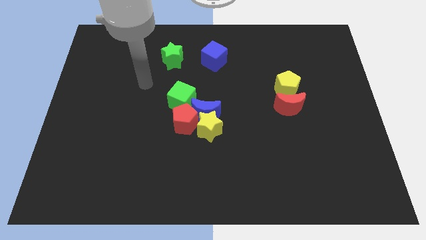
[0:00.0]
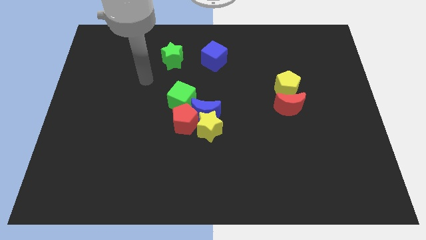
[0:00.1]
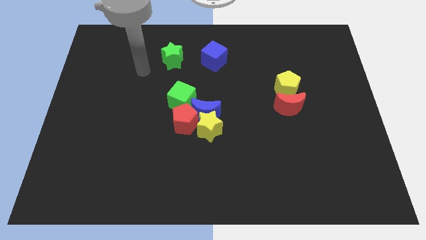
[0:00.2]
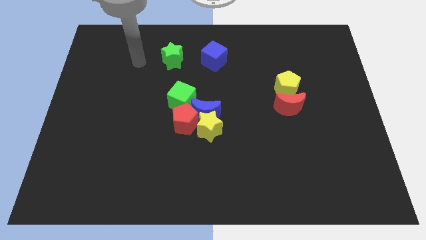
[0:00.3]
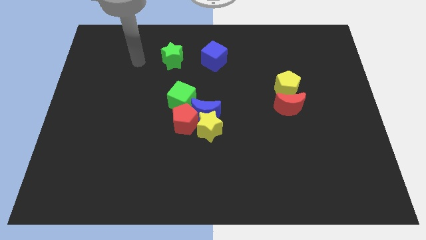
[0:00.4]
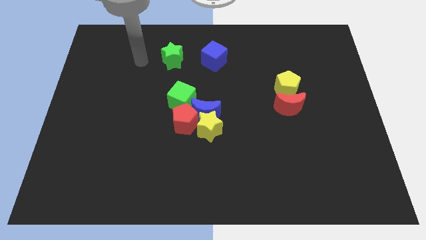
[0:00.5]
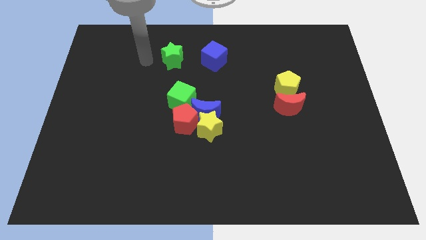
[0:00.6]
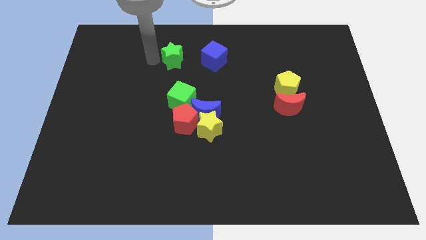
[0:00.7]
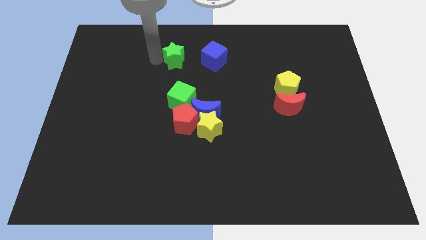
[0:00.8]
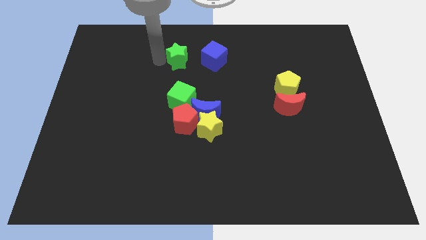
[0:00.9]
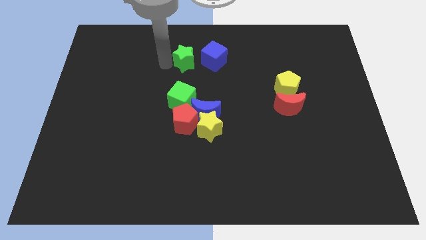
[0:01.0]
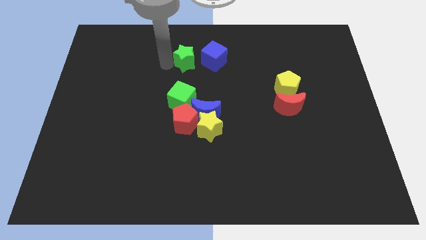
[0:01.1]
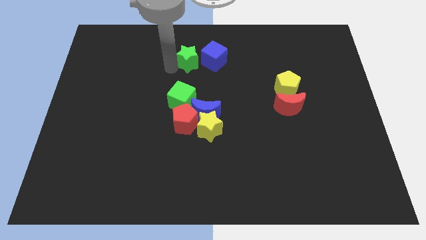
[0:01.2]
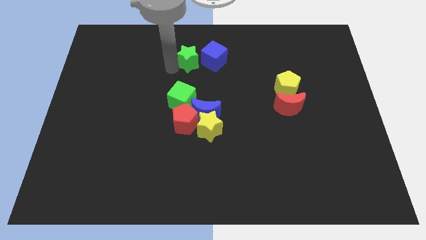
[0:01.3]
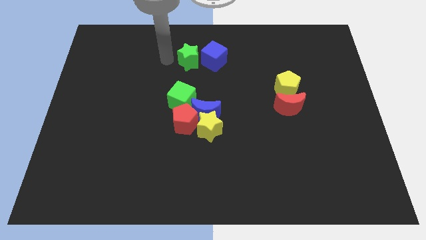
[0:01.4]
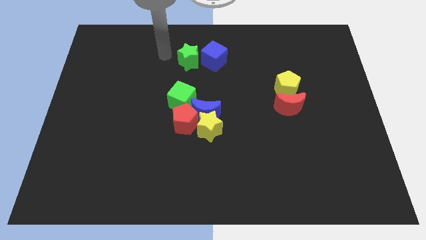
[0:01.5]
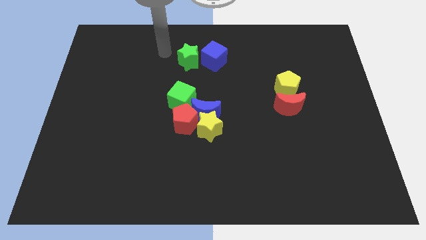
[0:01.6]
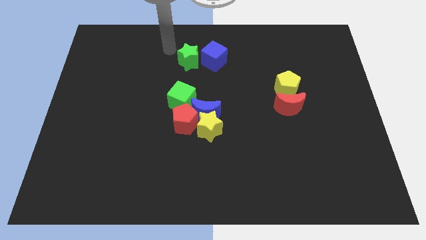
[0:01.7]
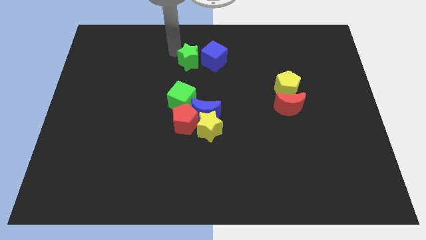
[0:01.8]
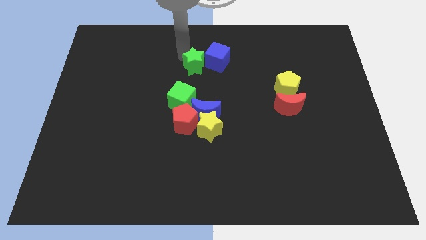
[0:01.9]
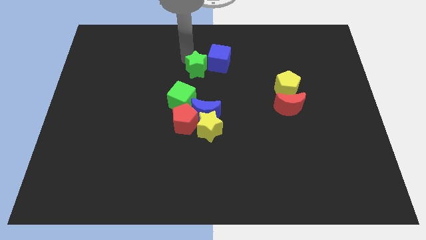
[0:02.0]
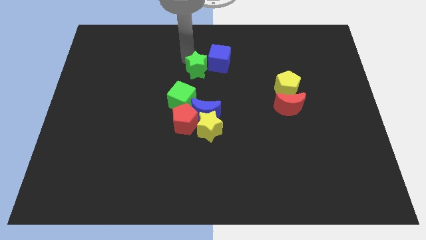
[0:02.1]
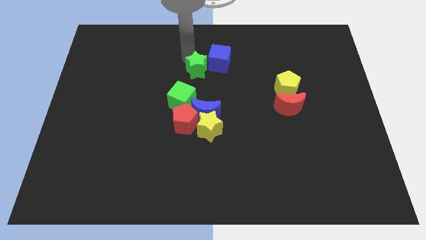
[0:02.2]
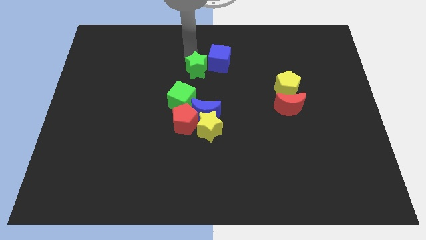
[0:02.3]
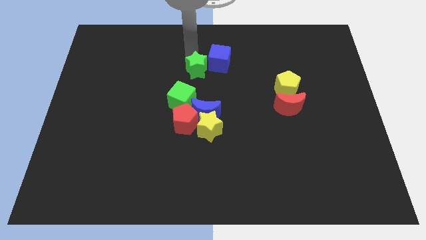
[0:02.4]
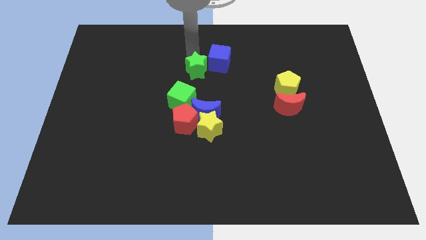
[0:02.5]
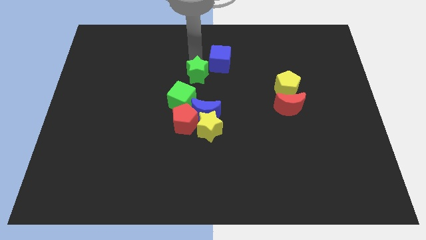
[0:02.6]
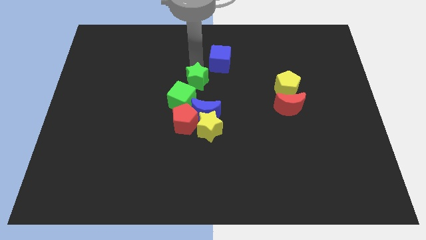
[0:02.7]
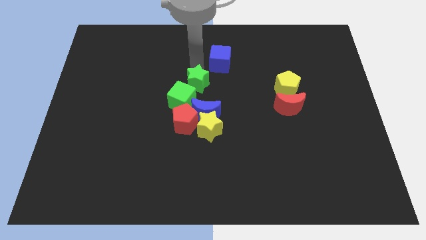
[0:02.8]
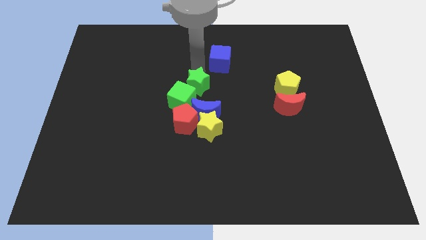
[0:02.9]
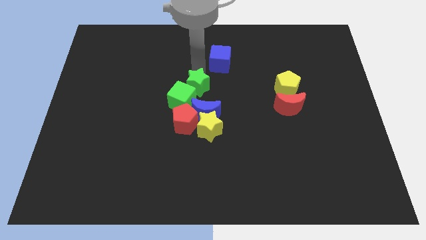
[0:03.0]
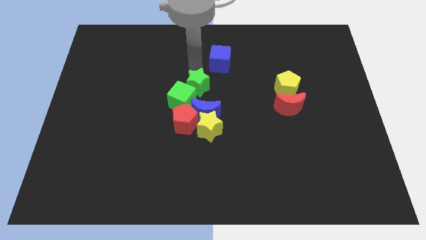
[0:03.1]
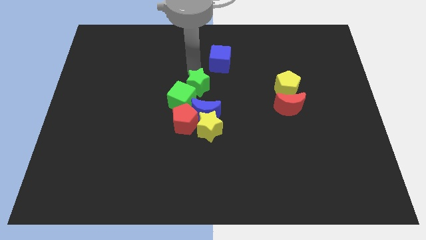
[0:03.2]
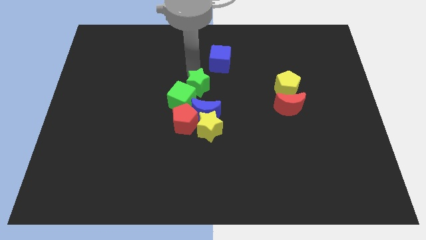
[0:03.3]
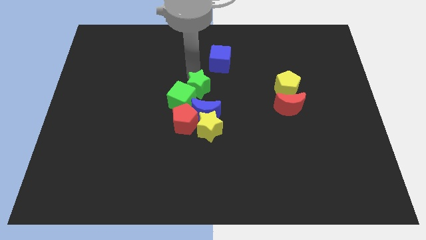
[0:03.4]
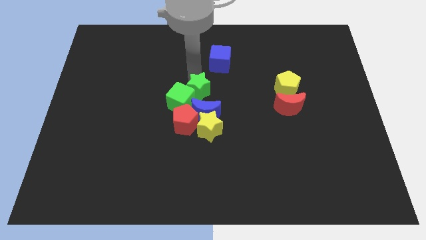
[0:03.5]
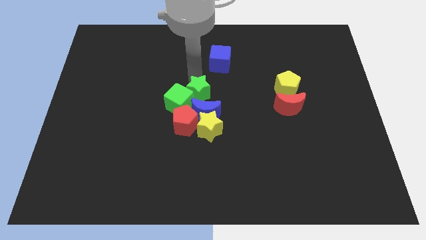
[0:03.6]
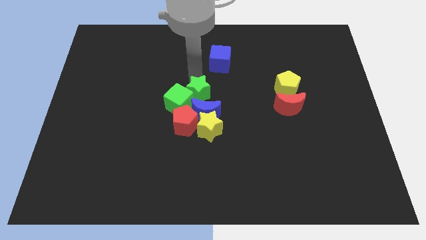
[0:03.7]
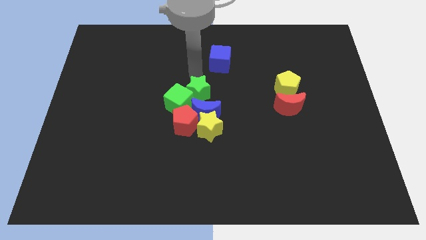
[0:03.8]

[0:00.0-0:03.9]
push the green star into the right of the green cube

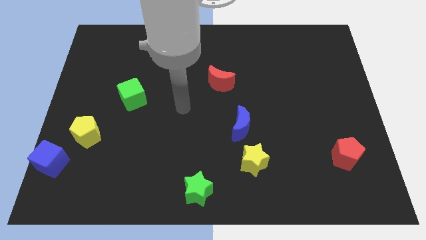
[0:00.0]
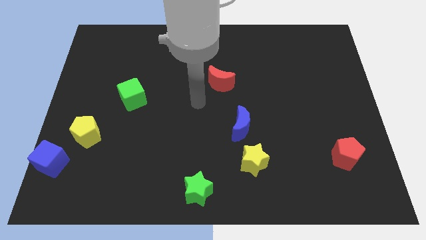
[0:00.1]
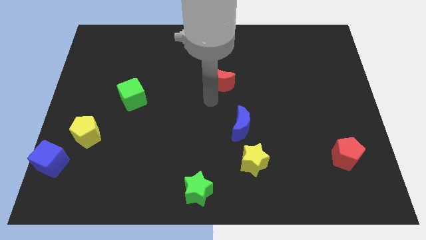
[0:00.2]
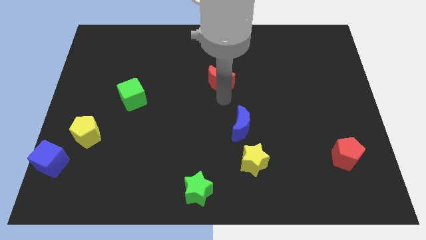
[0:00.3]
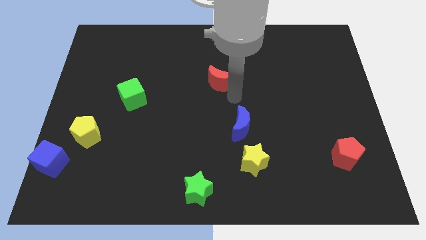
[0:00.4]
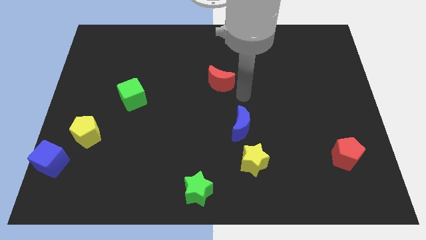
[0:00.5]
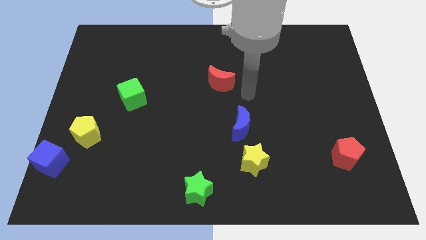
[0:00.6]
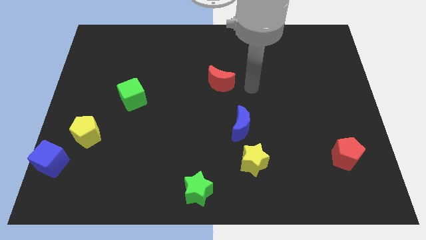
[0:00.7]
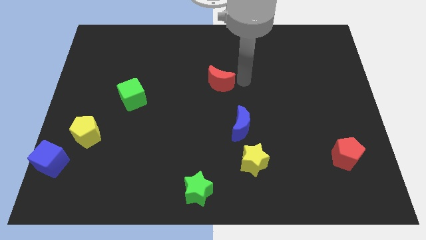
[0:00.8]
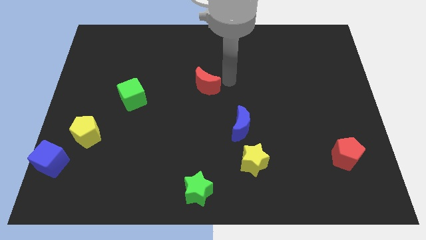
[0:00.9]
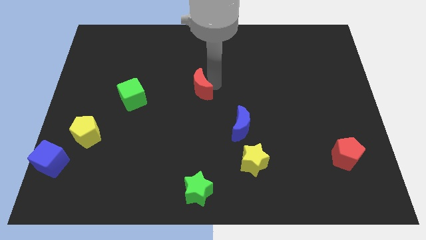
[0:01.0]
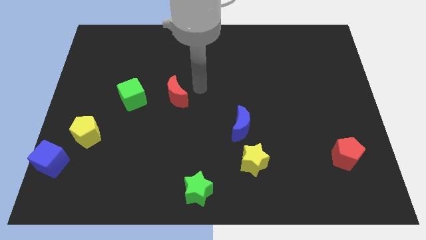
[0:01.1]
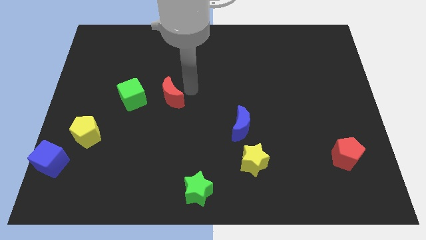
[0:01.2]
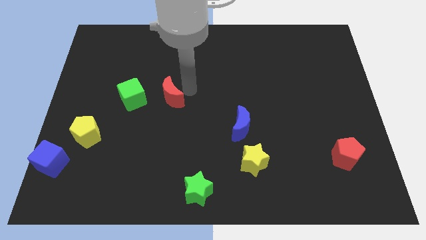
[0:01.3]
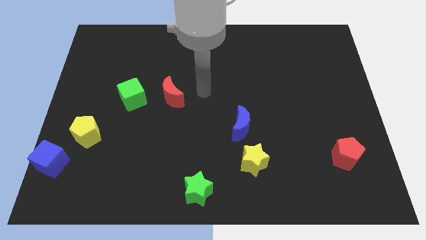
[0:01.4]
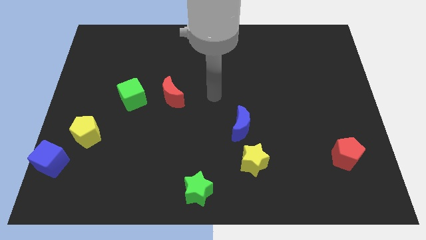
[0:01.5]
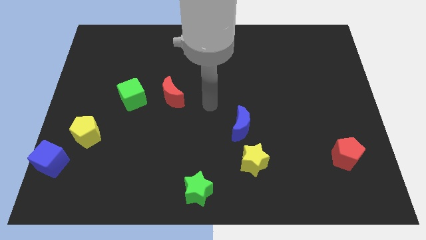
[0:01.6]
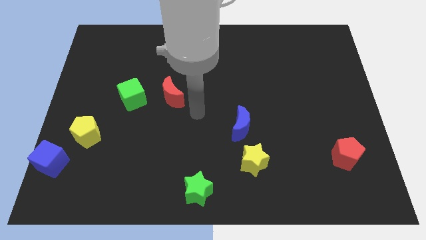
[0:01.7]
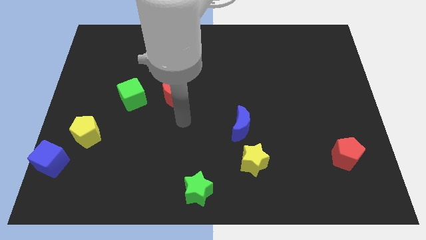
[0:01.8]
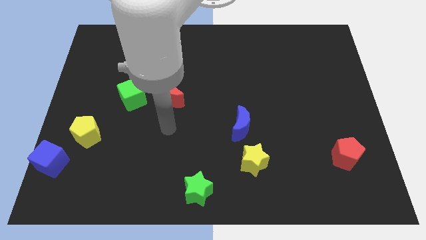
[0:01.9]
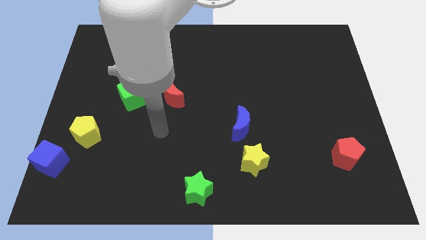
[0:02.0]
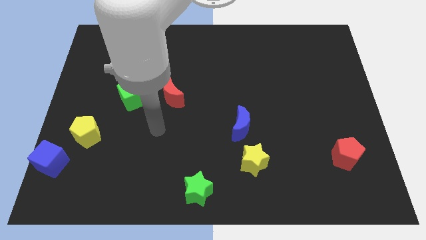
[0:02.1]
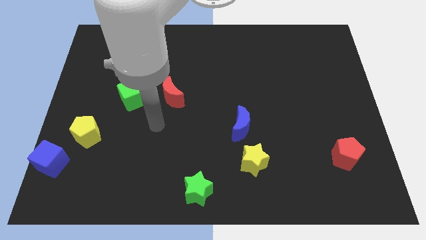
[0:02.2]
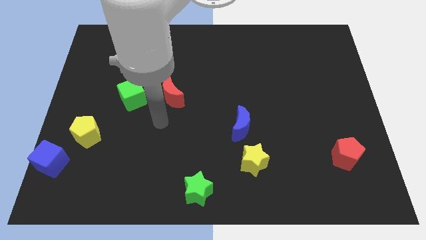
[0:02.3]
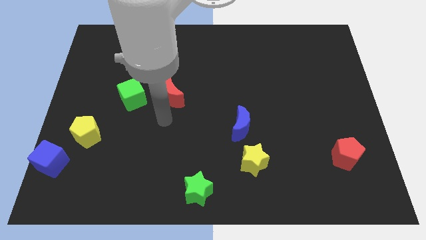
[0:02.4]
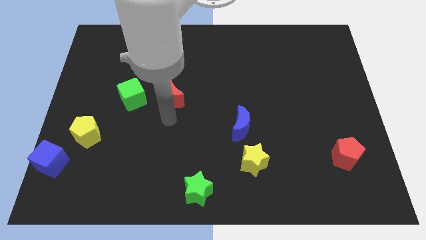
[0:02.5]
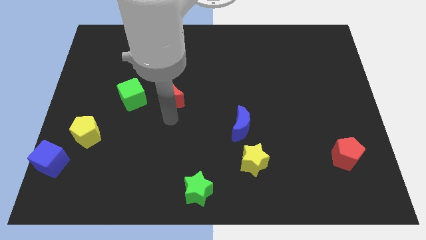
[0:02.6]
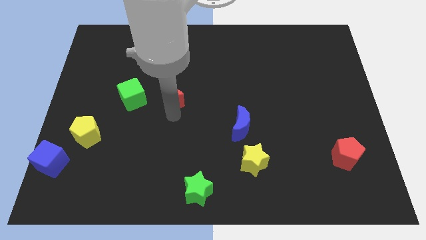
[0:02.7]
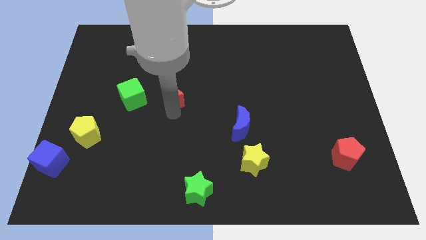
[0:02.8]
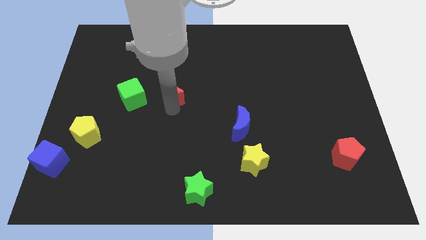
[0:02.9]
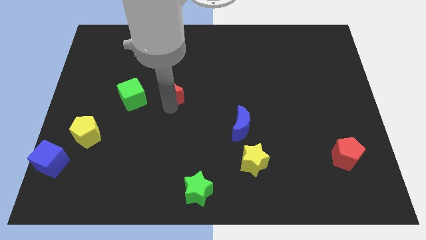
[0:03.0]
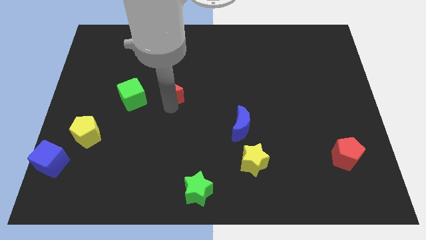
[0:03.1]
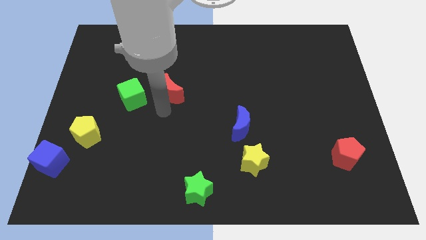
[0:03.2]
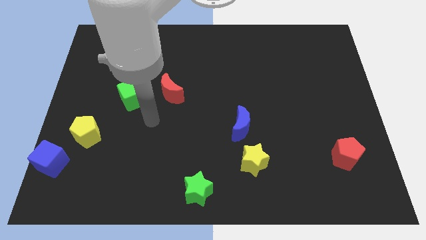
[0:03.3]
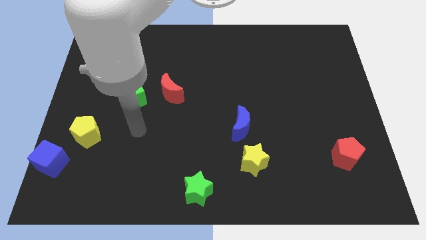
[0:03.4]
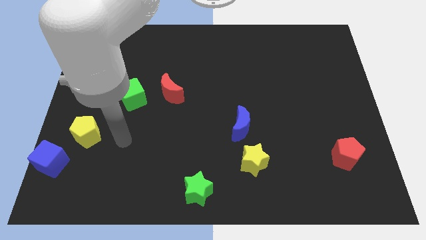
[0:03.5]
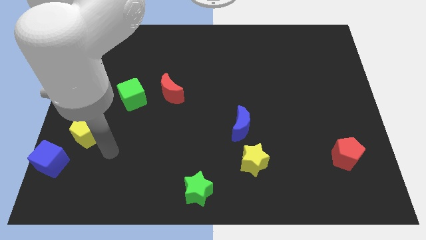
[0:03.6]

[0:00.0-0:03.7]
push the red crescent to the right of the green cube

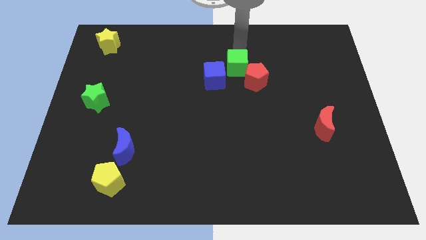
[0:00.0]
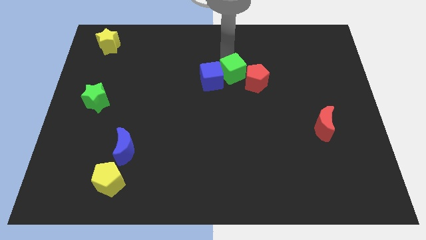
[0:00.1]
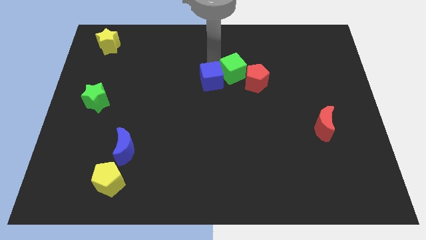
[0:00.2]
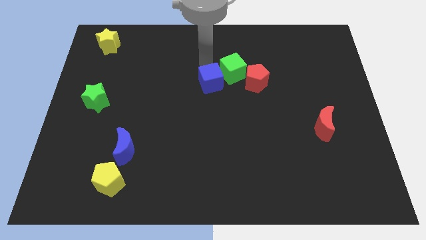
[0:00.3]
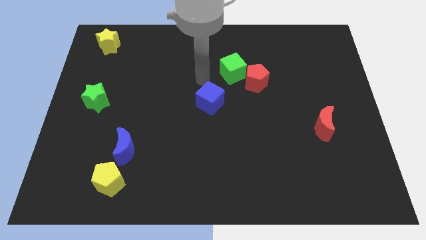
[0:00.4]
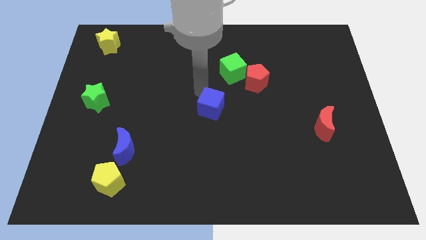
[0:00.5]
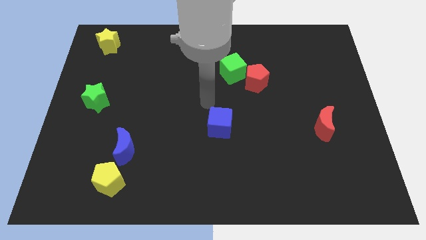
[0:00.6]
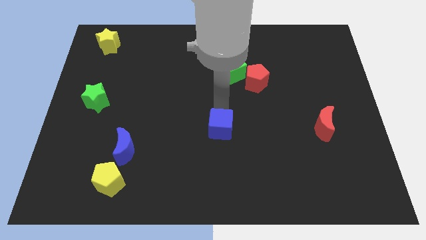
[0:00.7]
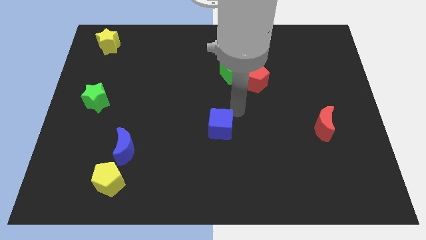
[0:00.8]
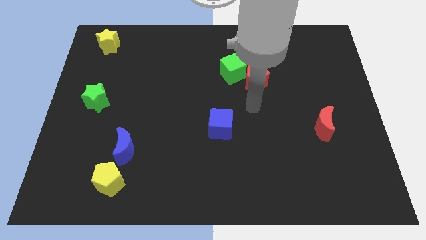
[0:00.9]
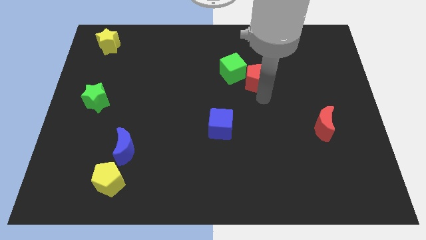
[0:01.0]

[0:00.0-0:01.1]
place the blue cube at the center of the board
